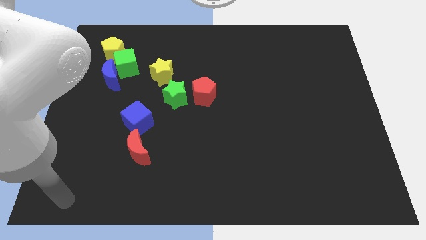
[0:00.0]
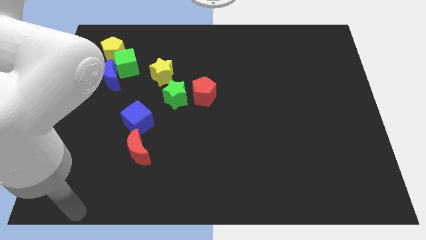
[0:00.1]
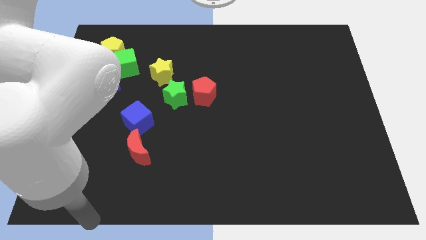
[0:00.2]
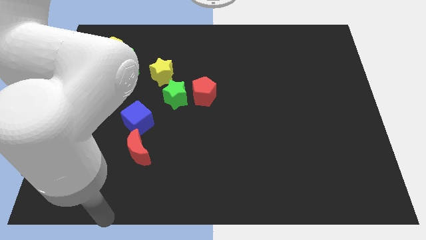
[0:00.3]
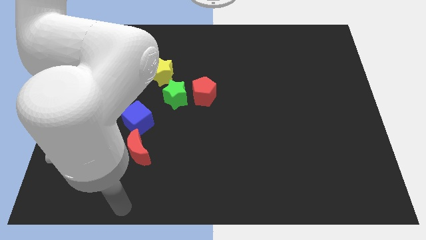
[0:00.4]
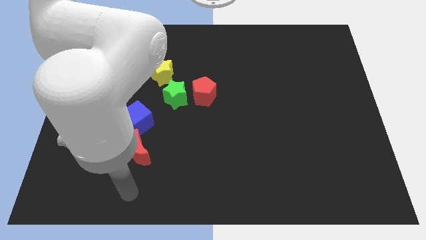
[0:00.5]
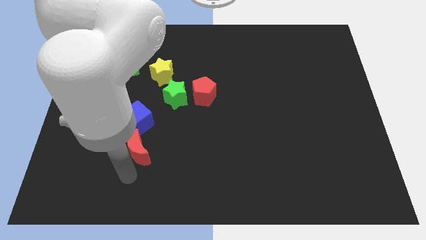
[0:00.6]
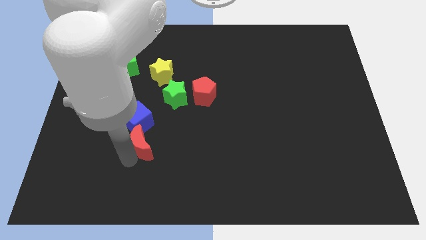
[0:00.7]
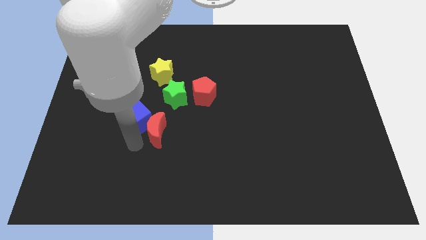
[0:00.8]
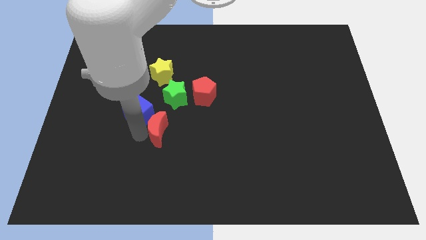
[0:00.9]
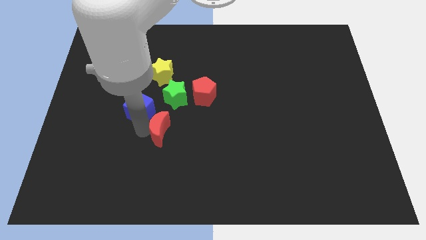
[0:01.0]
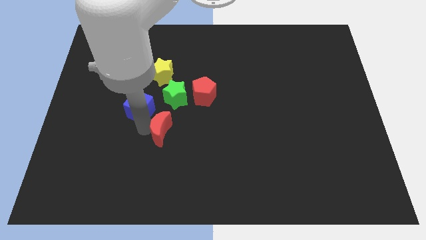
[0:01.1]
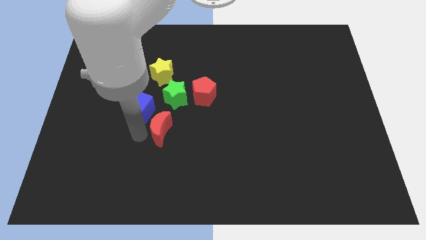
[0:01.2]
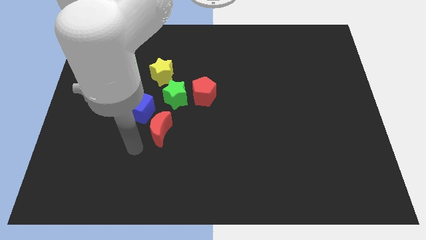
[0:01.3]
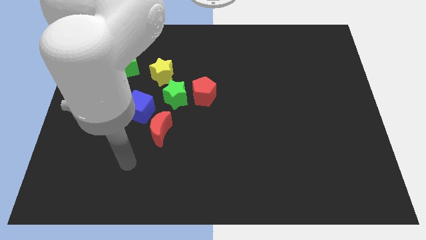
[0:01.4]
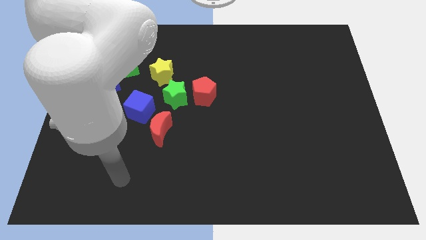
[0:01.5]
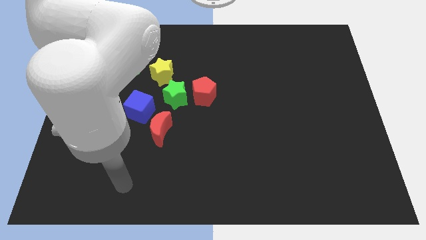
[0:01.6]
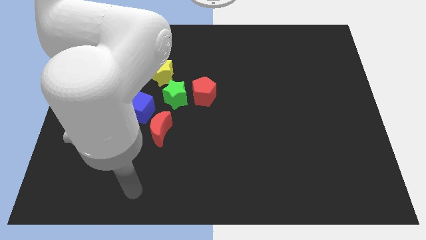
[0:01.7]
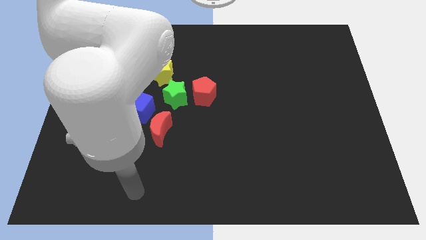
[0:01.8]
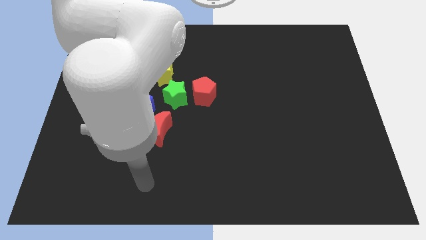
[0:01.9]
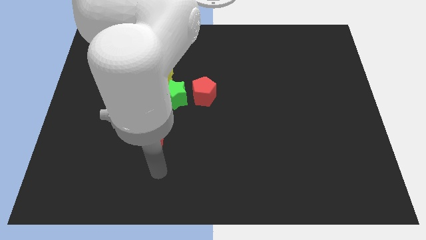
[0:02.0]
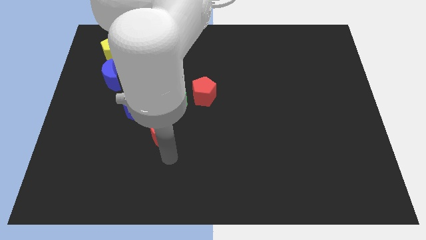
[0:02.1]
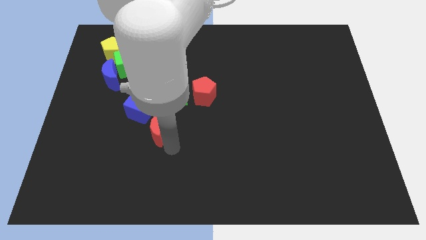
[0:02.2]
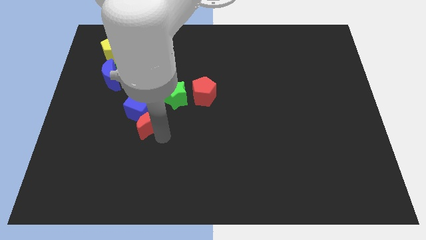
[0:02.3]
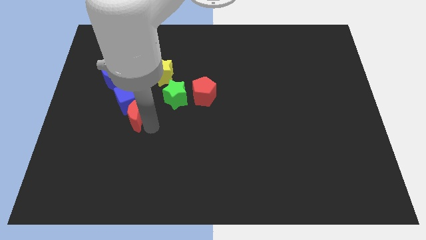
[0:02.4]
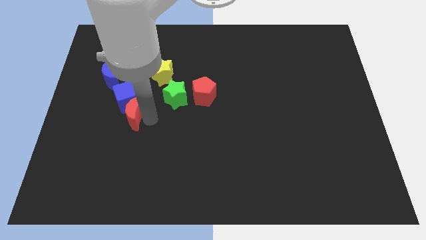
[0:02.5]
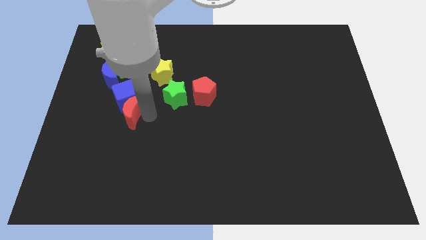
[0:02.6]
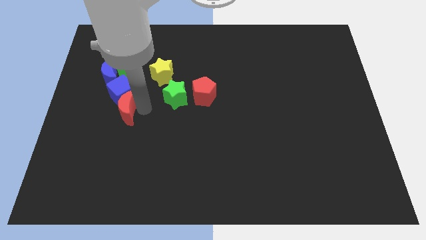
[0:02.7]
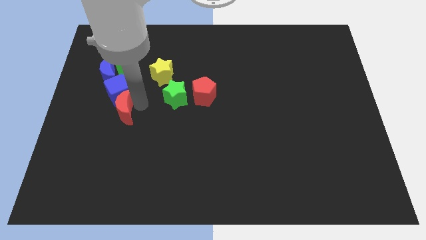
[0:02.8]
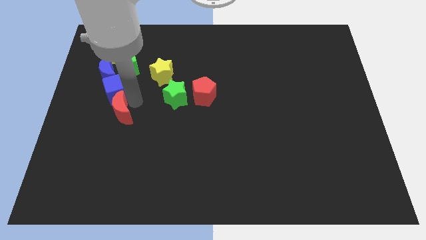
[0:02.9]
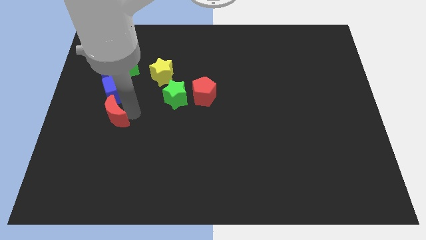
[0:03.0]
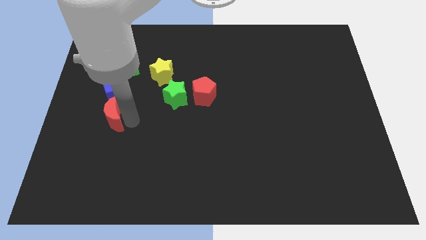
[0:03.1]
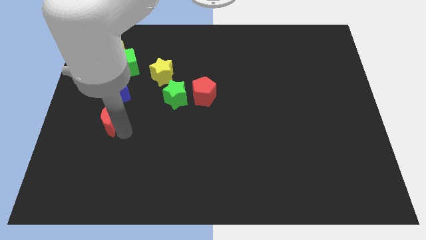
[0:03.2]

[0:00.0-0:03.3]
push the blue crescent and the blue cube with the red crescent slightly towards the top left of the board

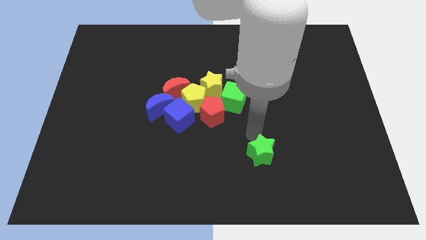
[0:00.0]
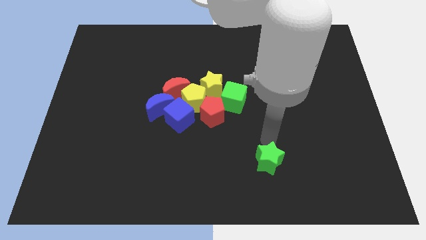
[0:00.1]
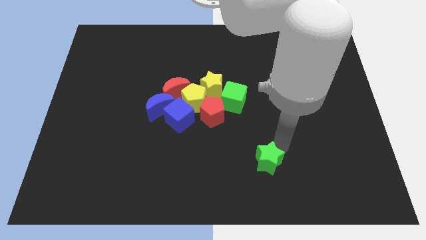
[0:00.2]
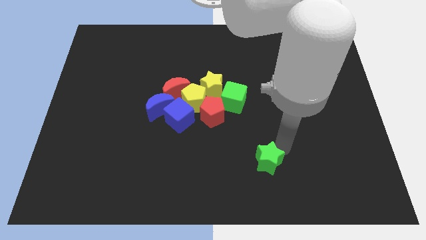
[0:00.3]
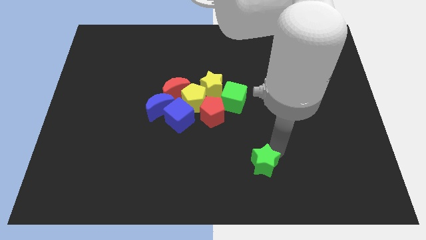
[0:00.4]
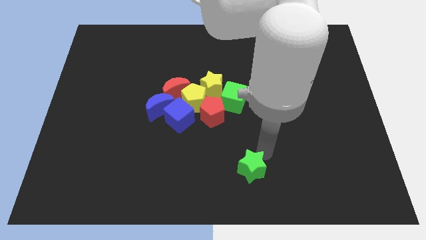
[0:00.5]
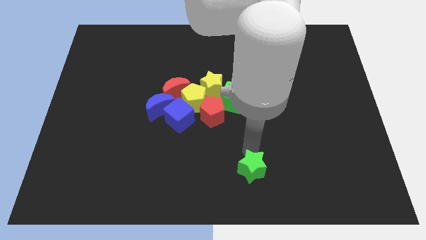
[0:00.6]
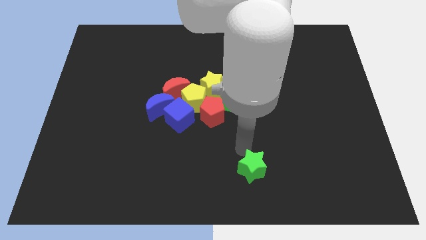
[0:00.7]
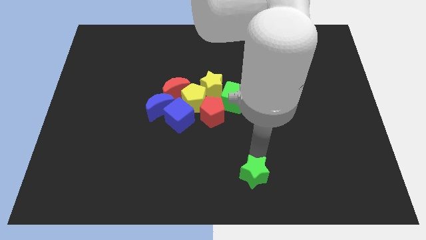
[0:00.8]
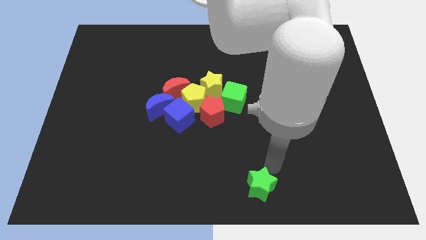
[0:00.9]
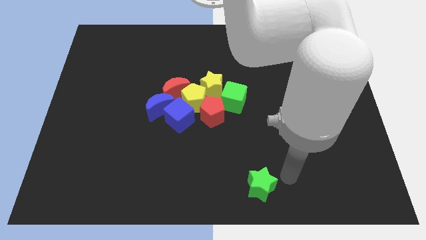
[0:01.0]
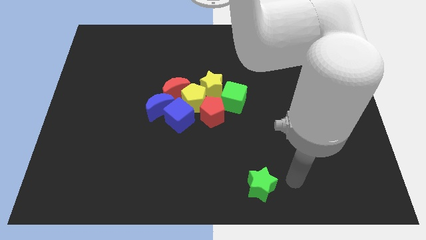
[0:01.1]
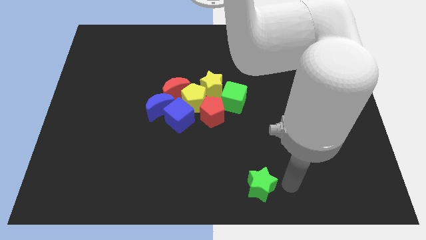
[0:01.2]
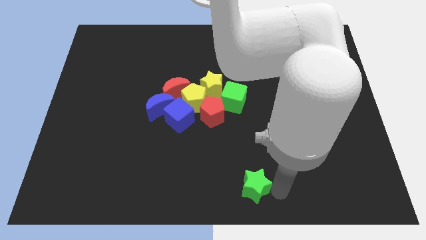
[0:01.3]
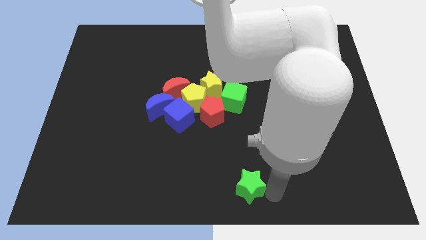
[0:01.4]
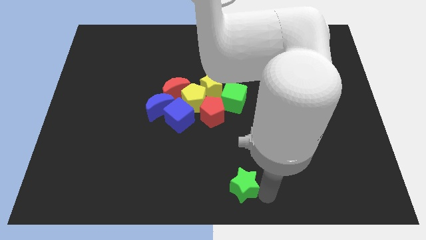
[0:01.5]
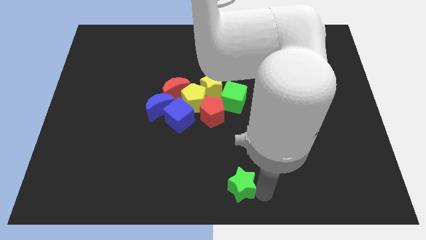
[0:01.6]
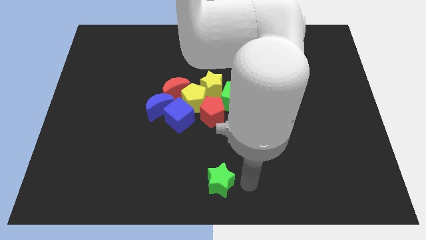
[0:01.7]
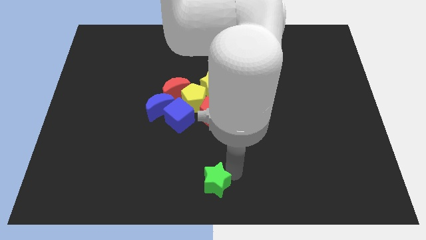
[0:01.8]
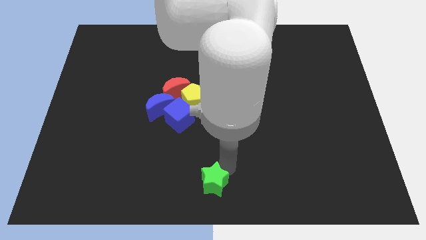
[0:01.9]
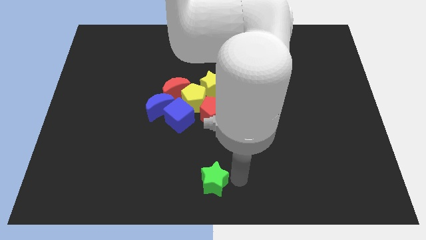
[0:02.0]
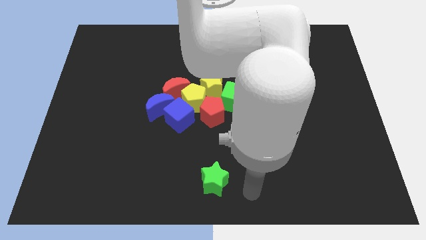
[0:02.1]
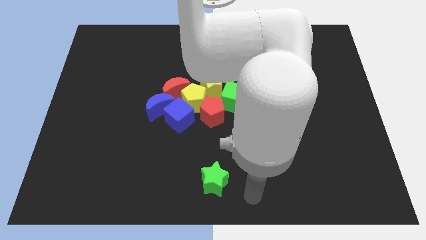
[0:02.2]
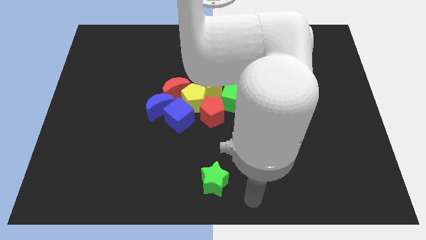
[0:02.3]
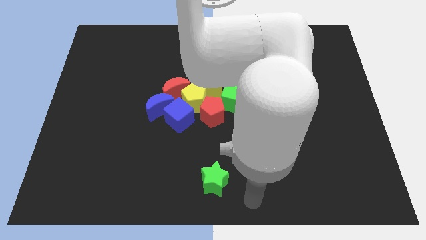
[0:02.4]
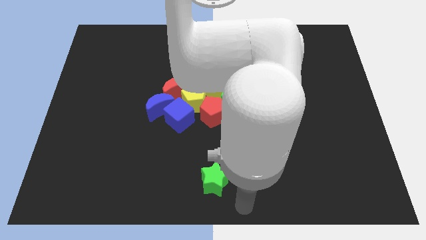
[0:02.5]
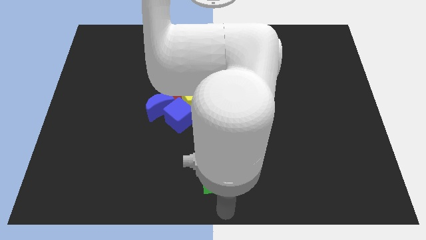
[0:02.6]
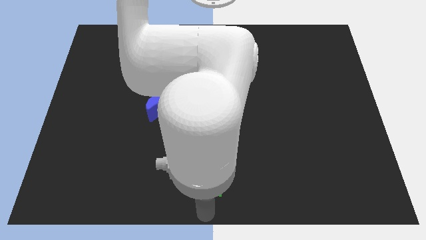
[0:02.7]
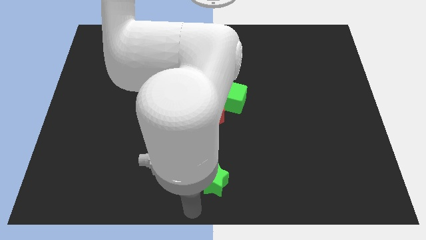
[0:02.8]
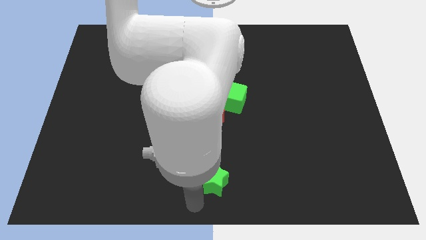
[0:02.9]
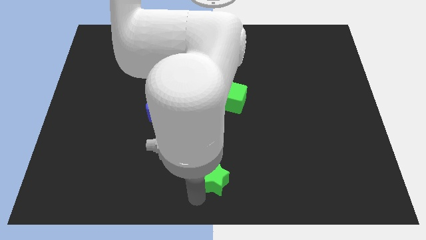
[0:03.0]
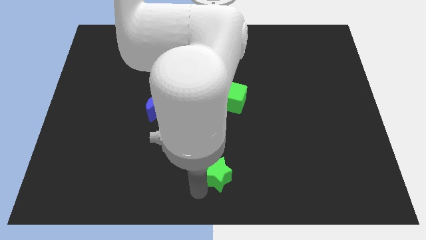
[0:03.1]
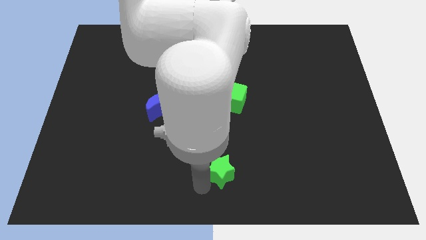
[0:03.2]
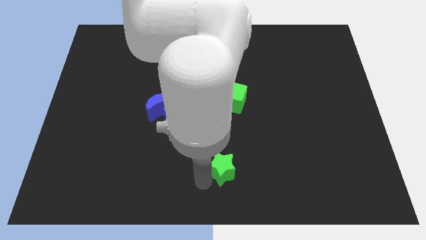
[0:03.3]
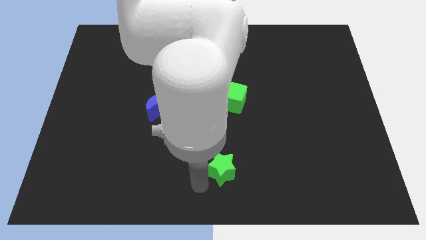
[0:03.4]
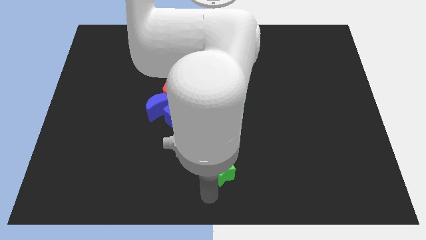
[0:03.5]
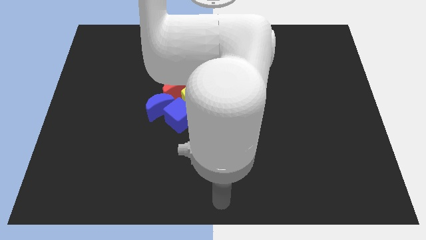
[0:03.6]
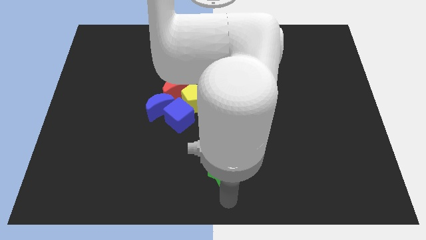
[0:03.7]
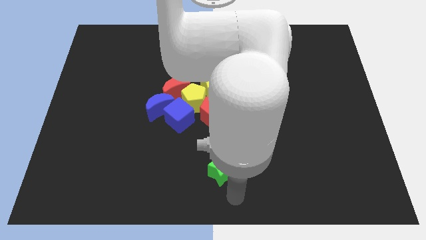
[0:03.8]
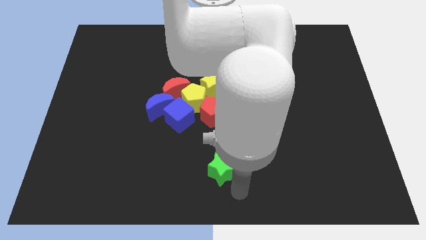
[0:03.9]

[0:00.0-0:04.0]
place the green vertically below red pentagon

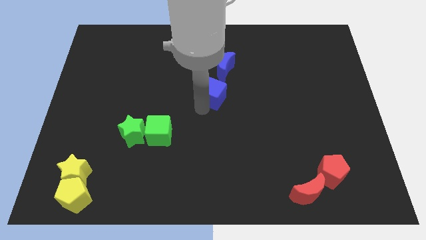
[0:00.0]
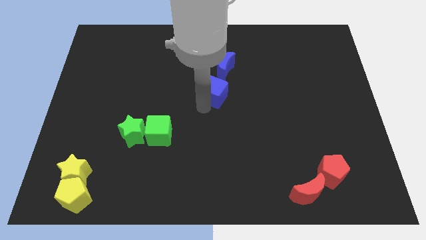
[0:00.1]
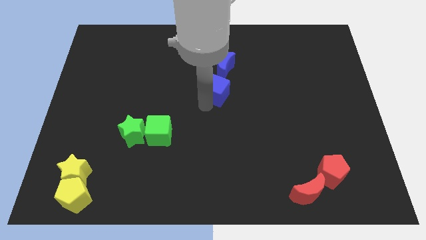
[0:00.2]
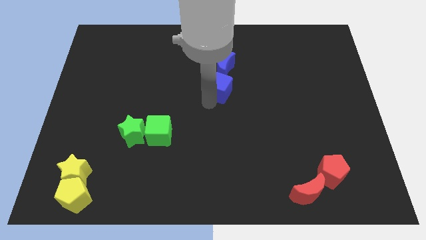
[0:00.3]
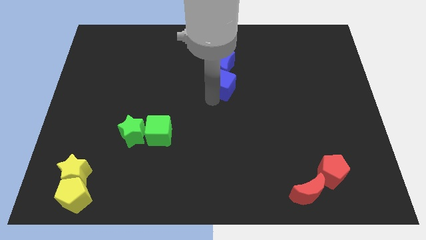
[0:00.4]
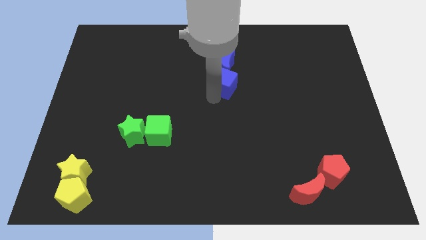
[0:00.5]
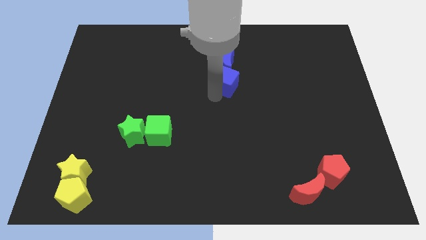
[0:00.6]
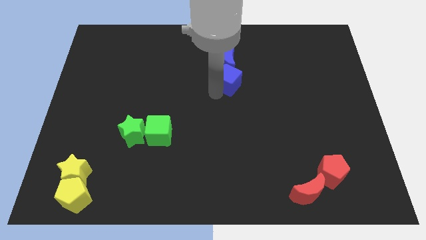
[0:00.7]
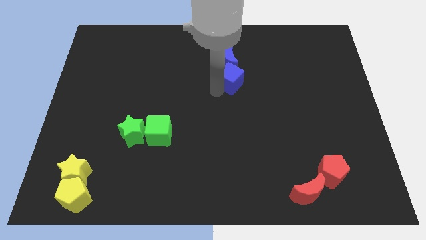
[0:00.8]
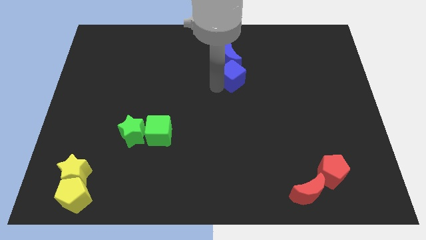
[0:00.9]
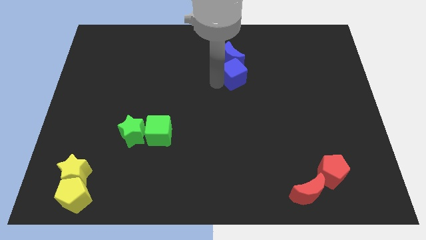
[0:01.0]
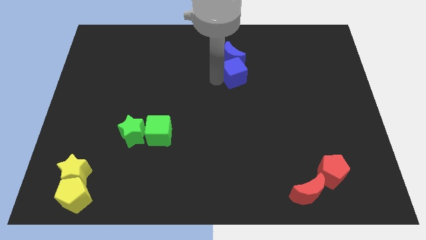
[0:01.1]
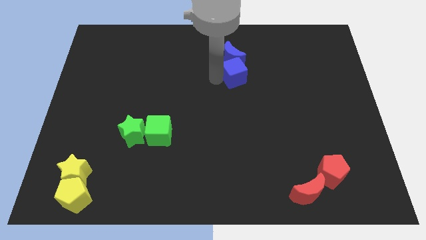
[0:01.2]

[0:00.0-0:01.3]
move the blue cube into the blue crescent

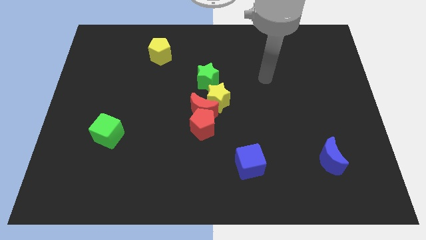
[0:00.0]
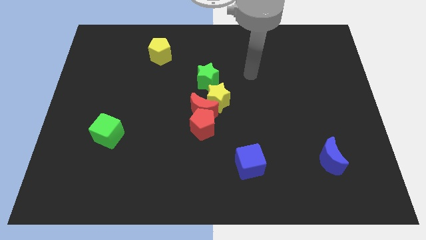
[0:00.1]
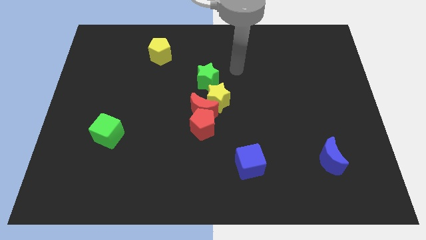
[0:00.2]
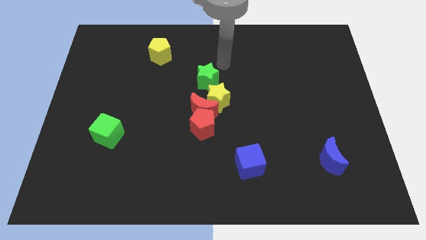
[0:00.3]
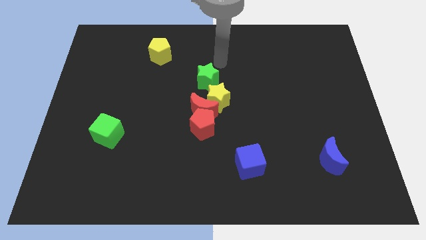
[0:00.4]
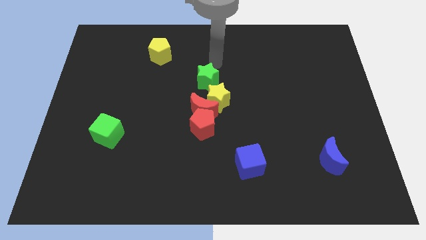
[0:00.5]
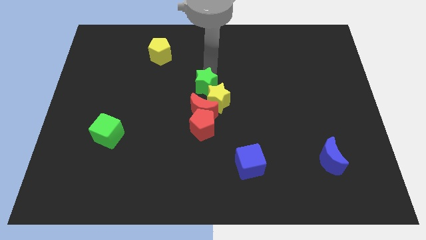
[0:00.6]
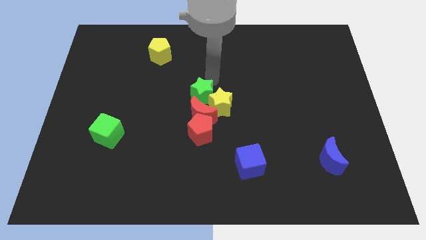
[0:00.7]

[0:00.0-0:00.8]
go near the green star
